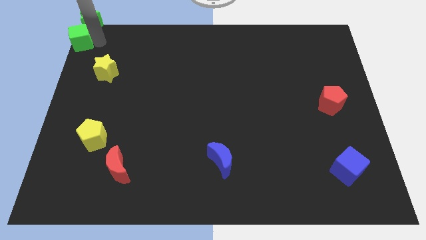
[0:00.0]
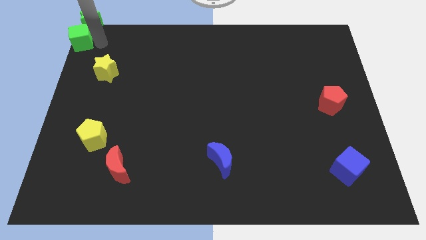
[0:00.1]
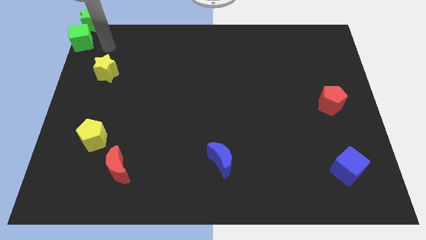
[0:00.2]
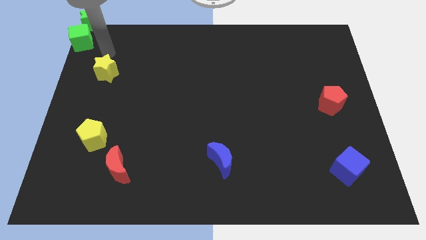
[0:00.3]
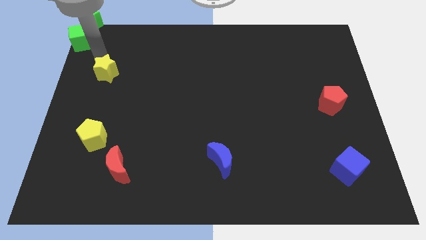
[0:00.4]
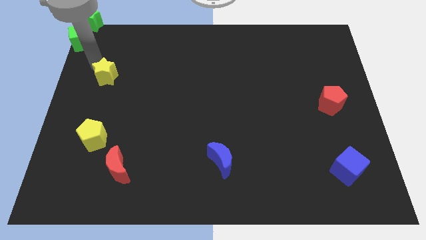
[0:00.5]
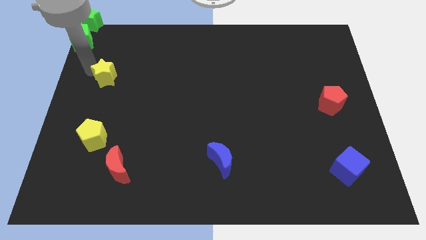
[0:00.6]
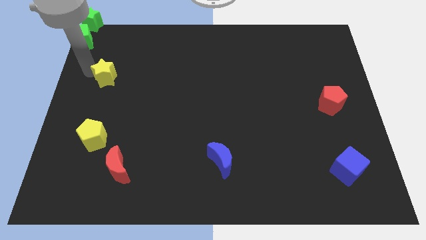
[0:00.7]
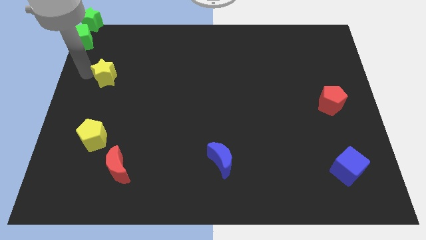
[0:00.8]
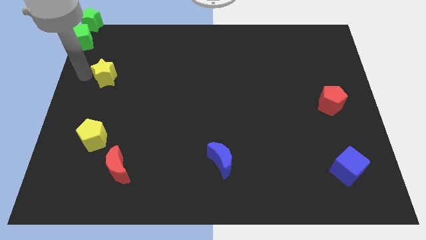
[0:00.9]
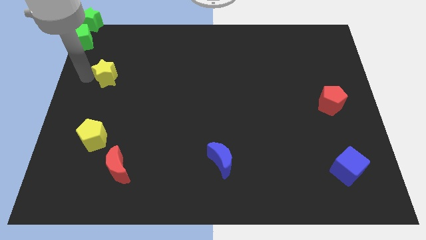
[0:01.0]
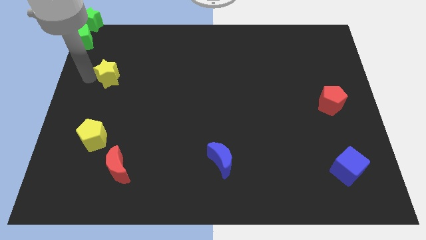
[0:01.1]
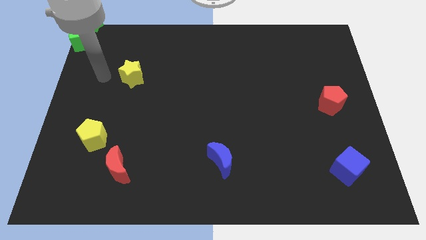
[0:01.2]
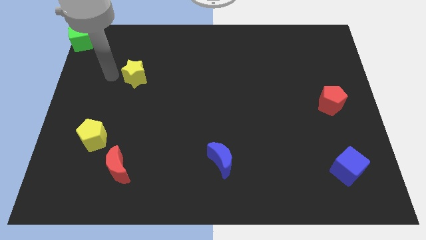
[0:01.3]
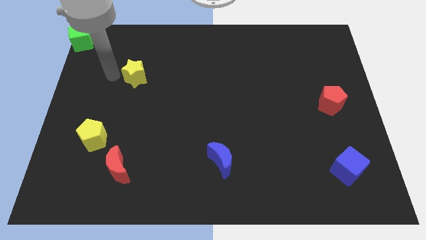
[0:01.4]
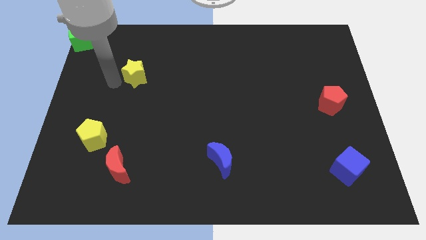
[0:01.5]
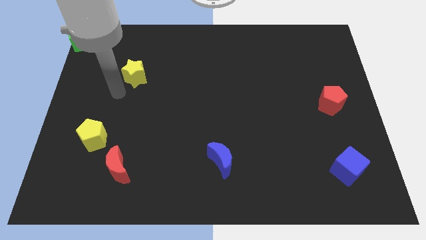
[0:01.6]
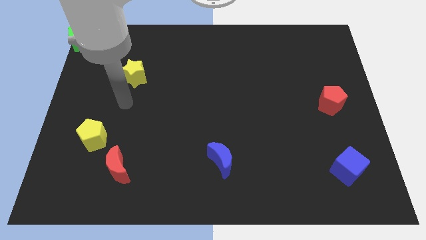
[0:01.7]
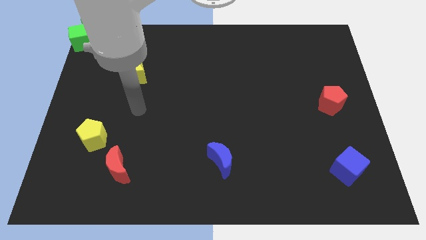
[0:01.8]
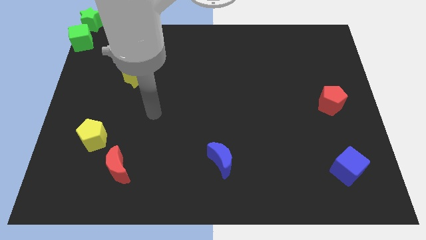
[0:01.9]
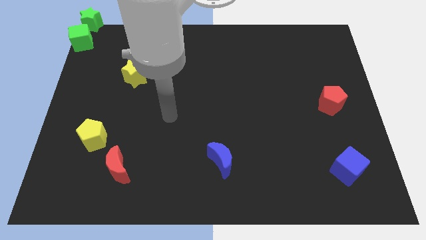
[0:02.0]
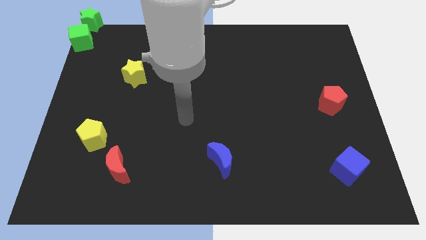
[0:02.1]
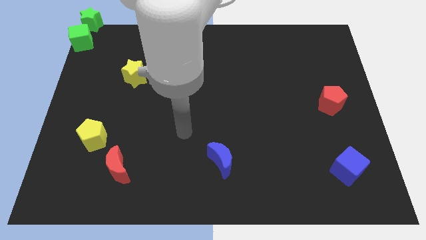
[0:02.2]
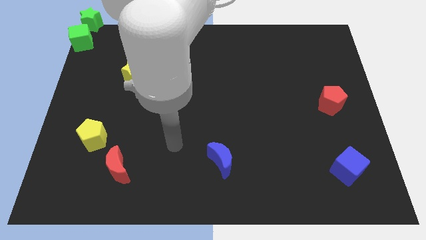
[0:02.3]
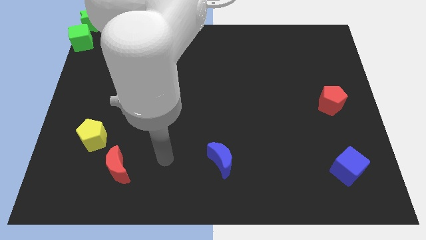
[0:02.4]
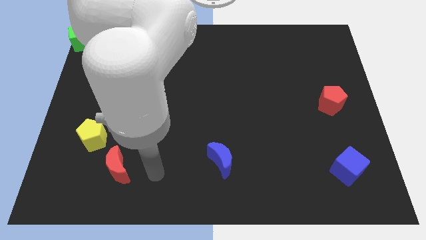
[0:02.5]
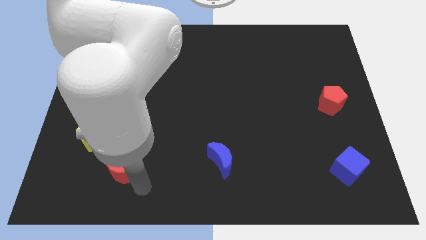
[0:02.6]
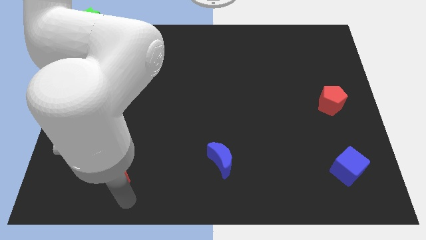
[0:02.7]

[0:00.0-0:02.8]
push the yellow star towards the right side of the board

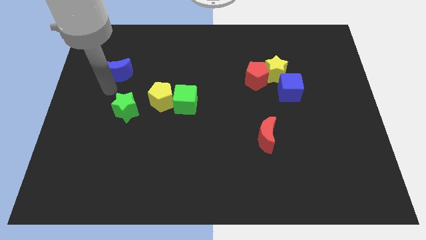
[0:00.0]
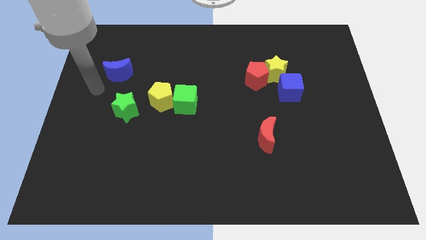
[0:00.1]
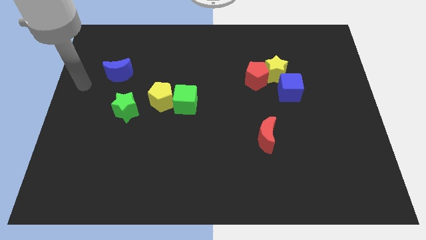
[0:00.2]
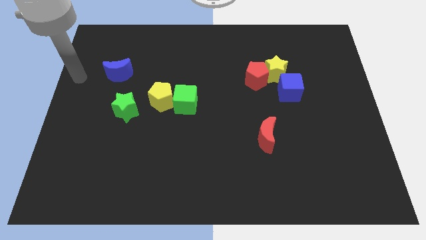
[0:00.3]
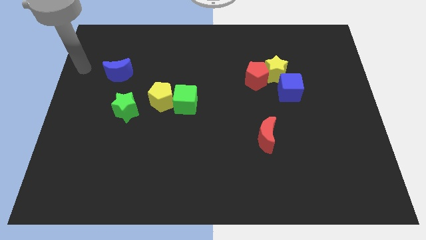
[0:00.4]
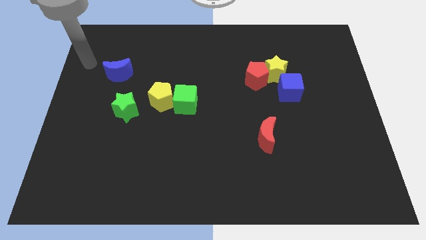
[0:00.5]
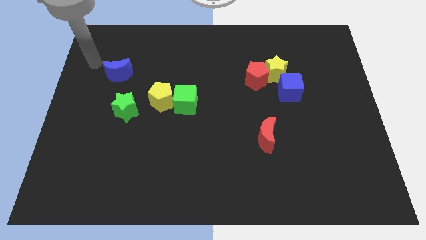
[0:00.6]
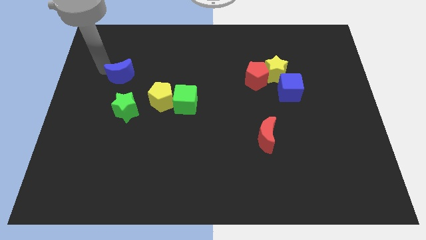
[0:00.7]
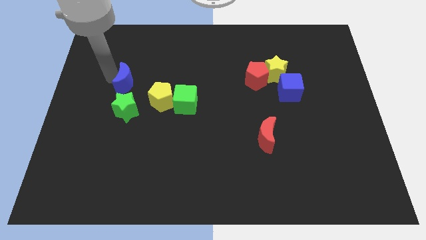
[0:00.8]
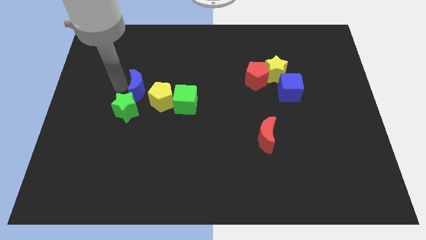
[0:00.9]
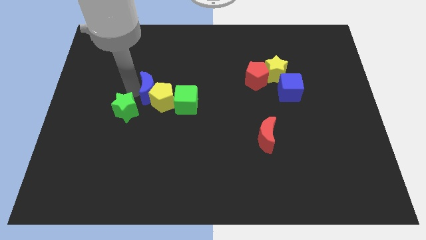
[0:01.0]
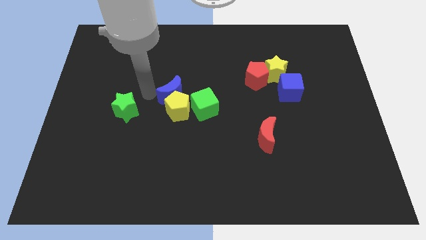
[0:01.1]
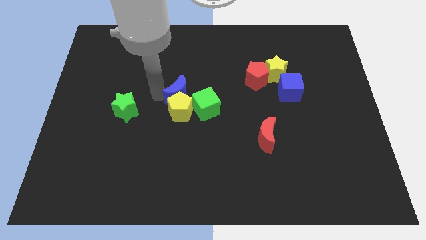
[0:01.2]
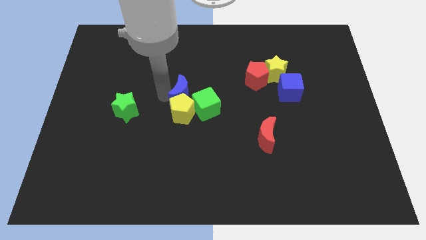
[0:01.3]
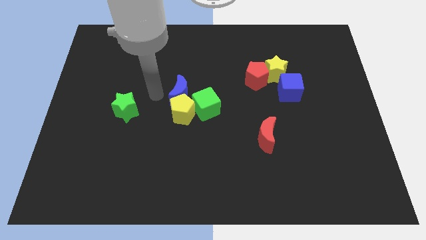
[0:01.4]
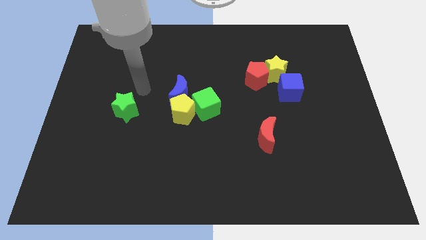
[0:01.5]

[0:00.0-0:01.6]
move blue moongreen cube and the yellow pentagon towards the center

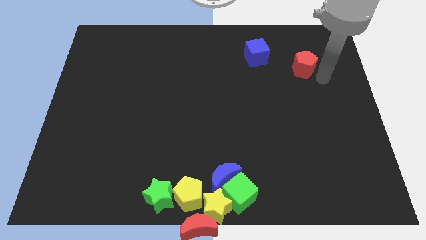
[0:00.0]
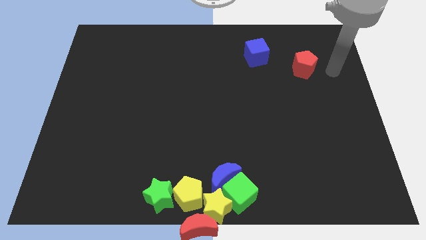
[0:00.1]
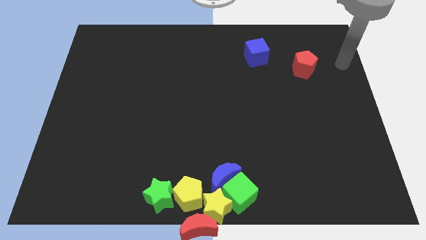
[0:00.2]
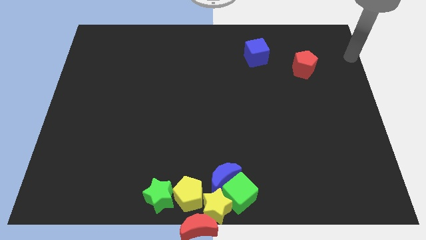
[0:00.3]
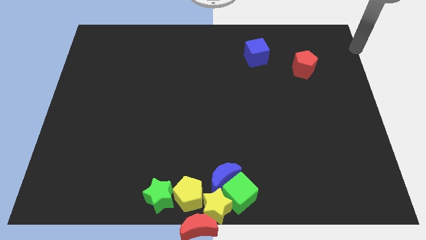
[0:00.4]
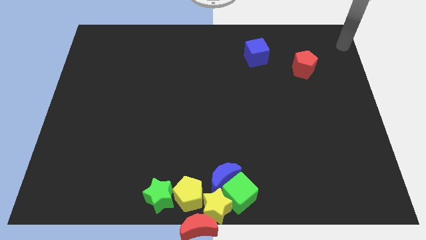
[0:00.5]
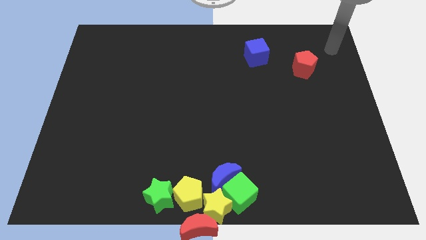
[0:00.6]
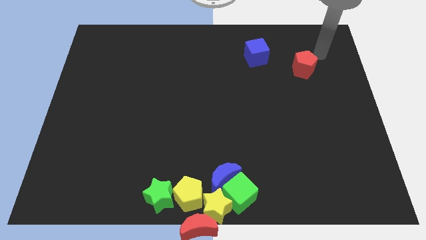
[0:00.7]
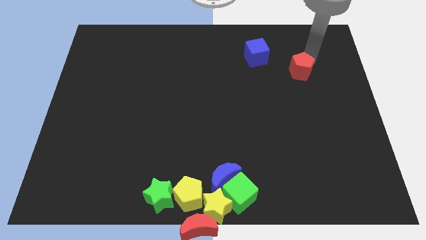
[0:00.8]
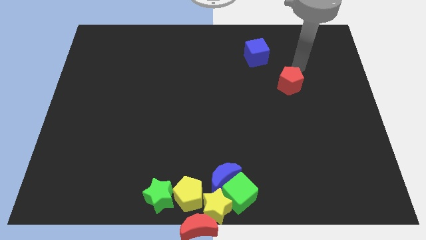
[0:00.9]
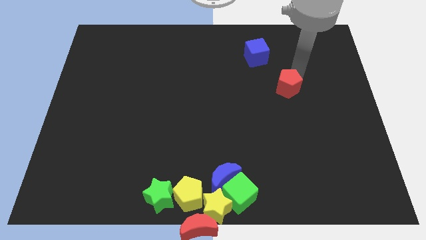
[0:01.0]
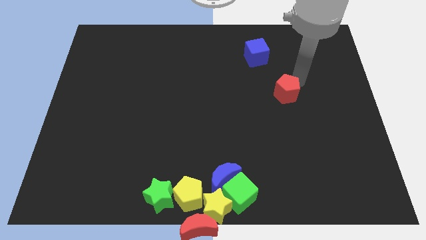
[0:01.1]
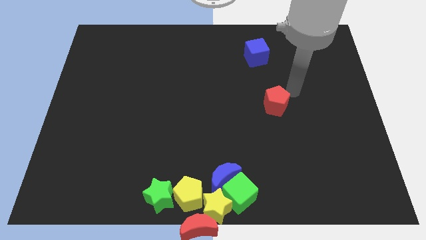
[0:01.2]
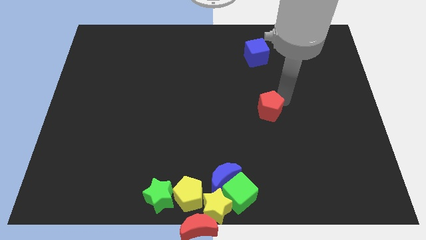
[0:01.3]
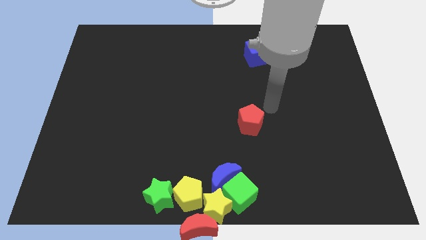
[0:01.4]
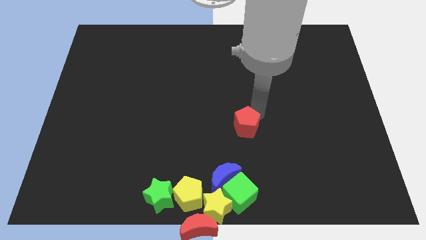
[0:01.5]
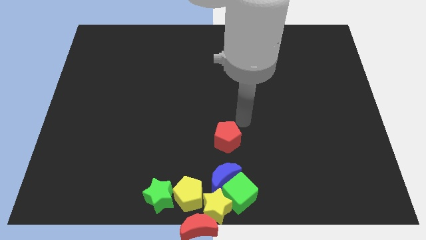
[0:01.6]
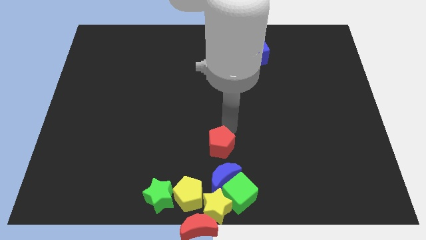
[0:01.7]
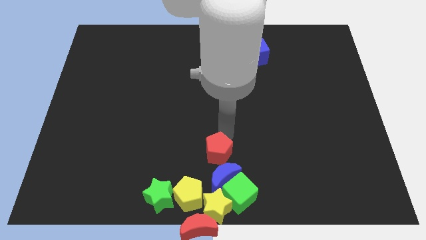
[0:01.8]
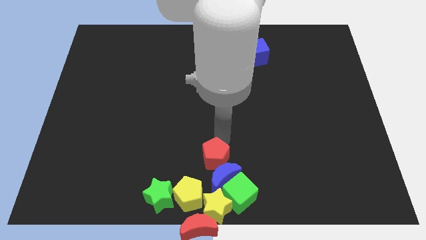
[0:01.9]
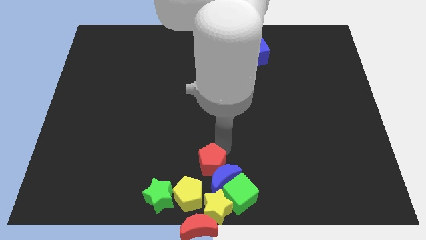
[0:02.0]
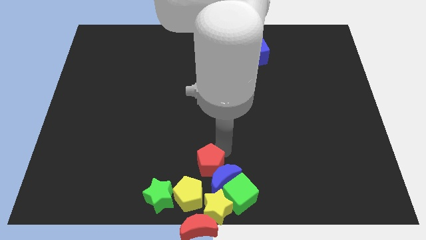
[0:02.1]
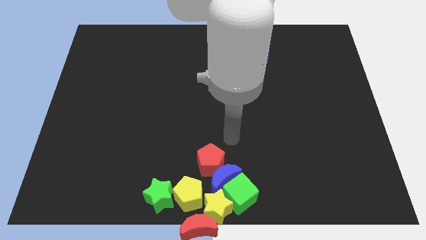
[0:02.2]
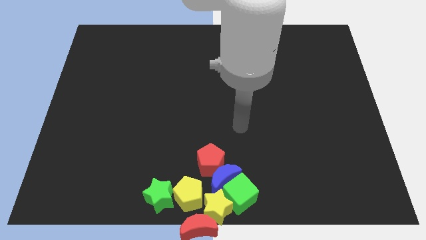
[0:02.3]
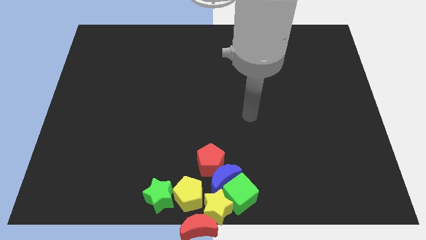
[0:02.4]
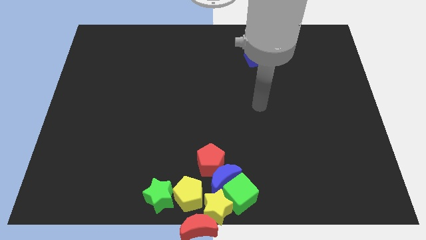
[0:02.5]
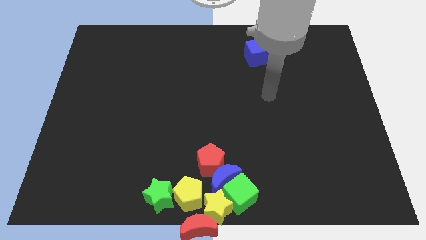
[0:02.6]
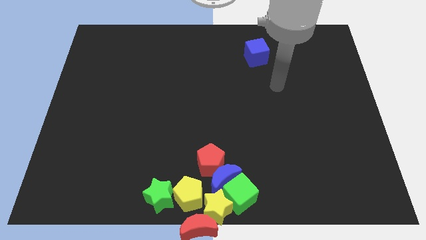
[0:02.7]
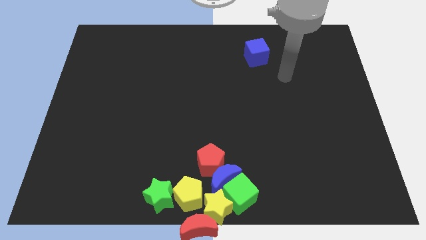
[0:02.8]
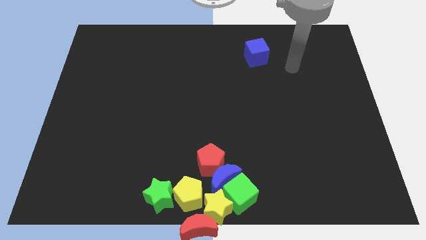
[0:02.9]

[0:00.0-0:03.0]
move the red pentagon diagonally to the top left of the blue moon

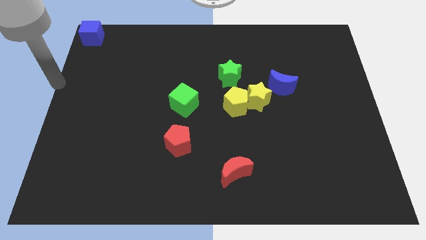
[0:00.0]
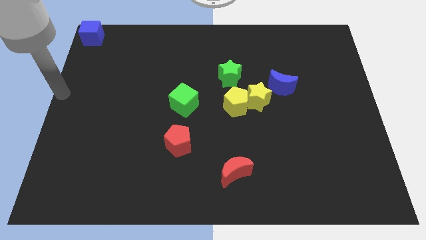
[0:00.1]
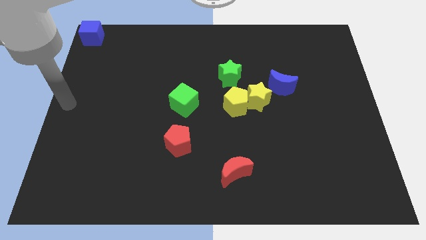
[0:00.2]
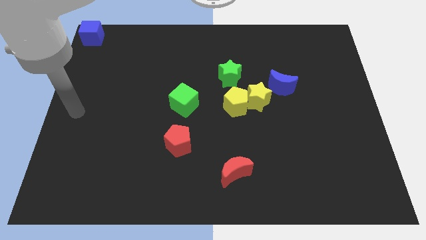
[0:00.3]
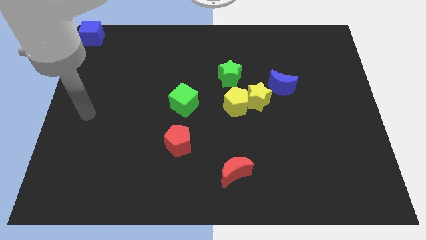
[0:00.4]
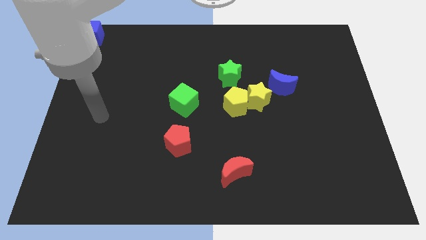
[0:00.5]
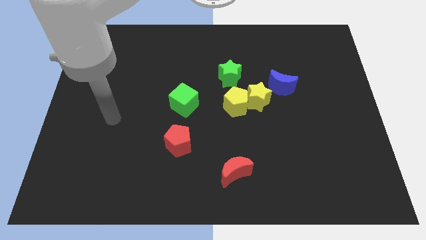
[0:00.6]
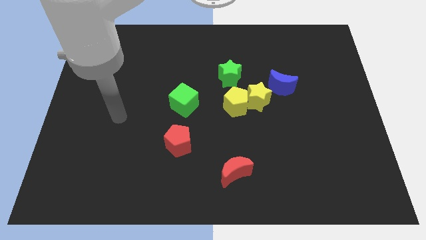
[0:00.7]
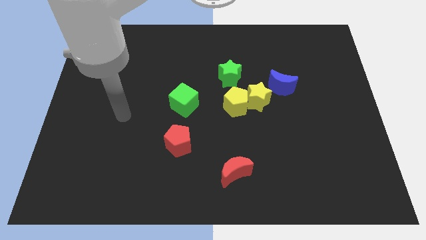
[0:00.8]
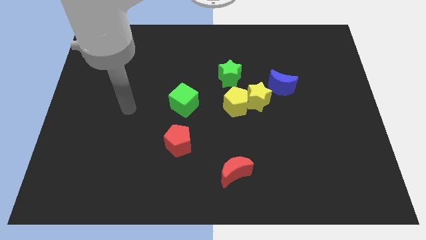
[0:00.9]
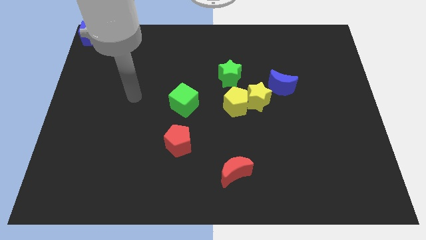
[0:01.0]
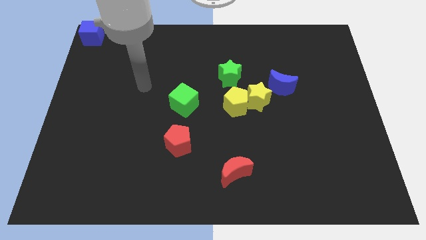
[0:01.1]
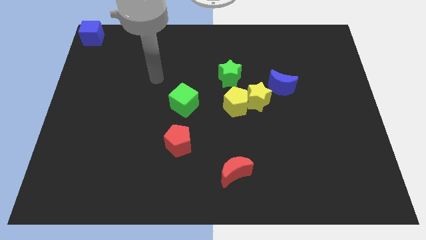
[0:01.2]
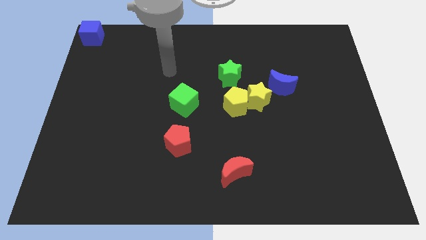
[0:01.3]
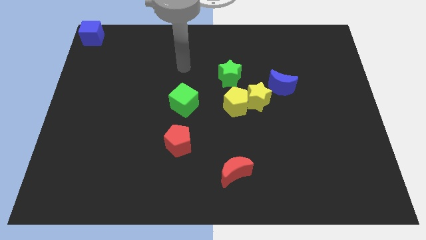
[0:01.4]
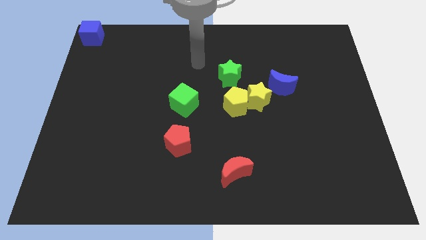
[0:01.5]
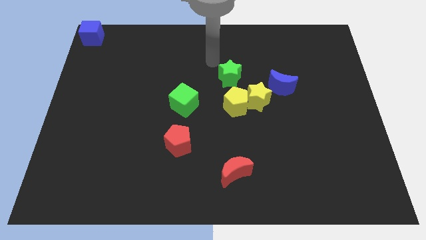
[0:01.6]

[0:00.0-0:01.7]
point your arm at the top left side of green star
